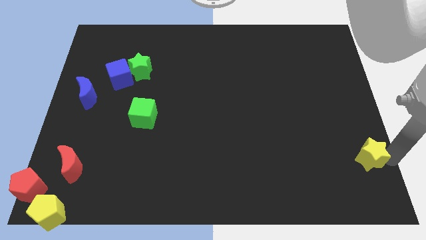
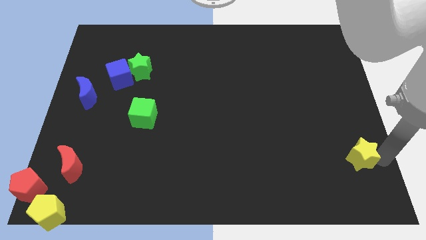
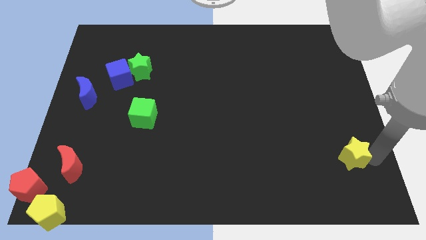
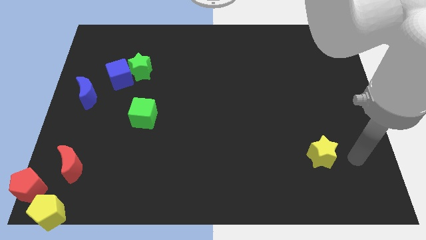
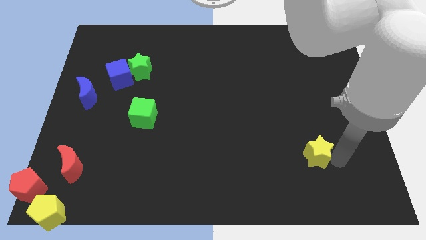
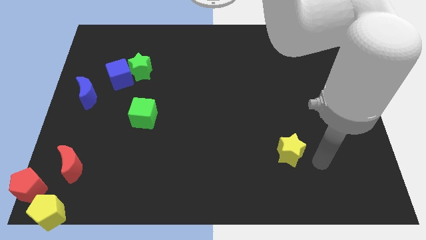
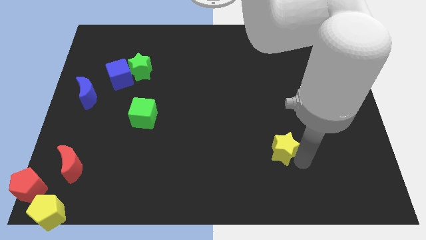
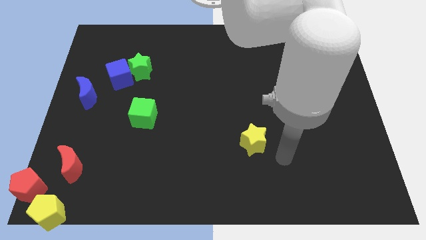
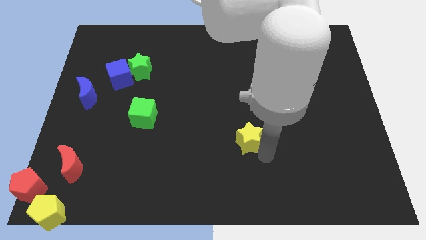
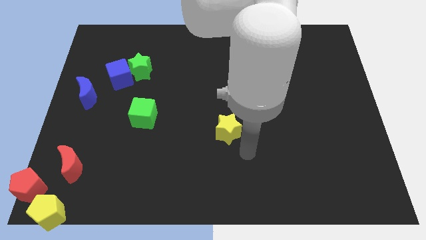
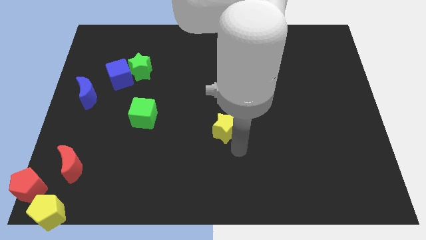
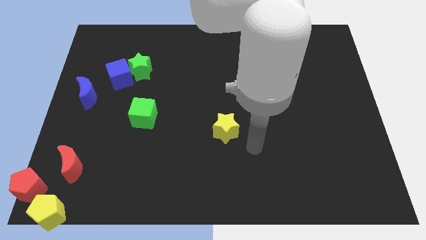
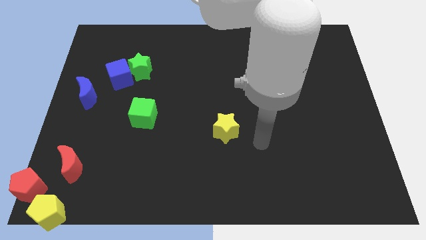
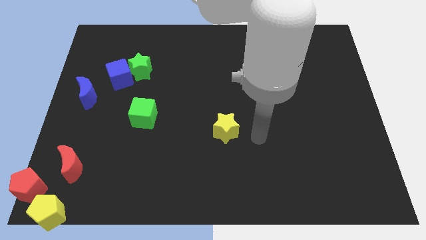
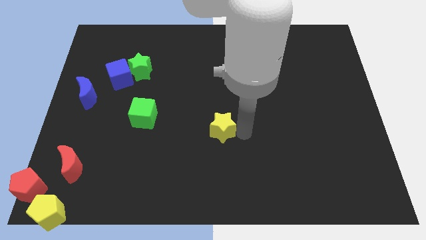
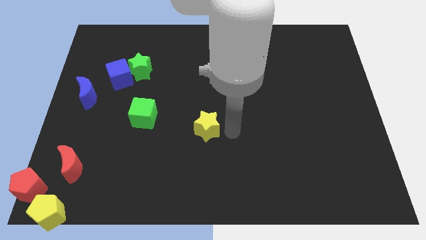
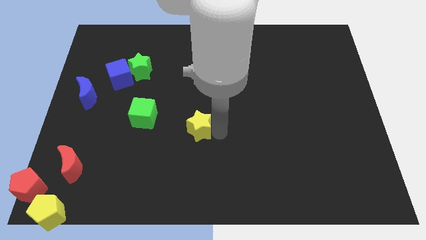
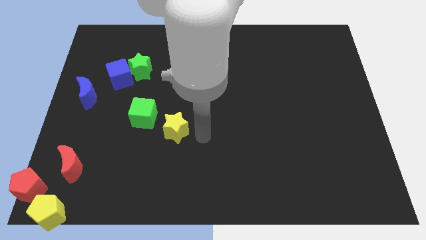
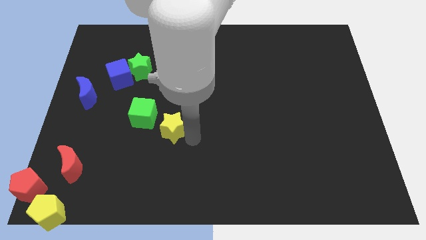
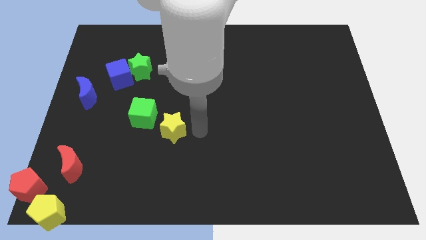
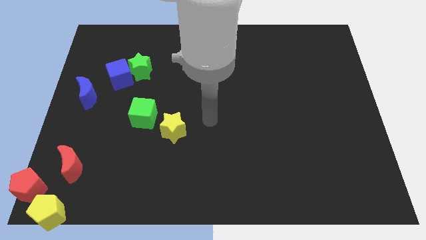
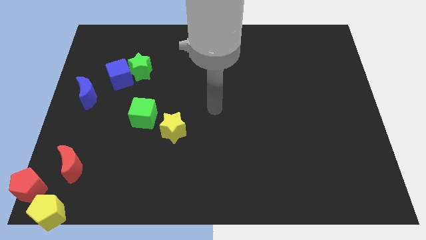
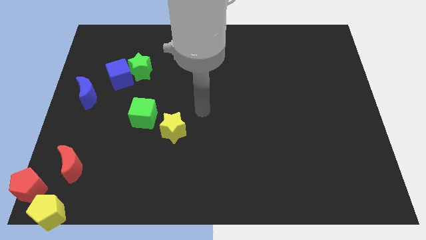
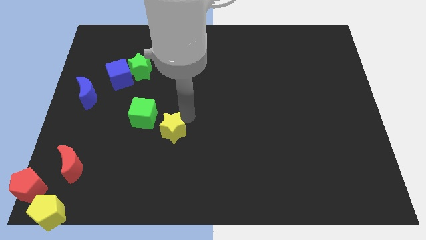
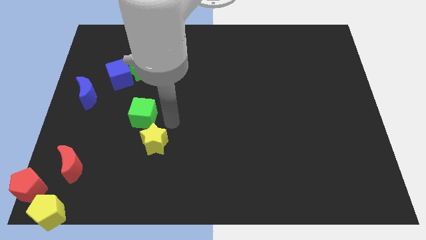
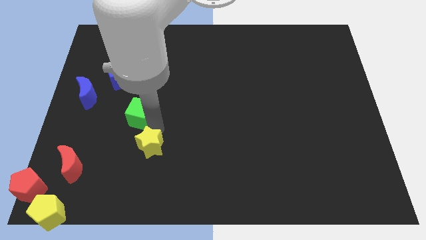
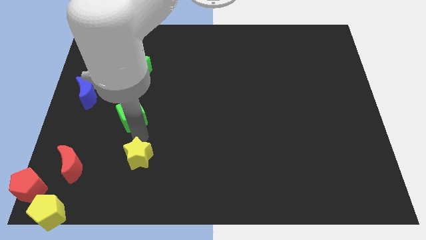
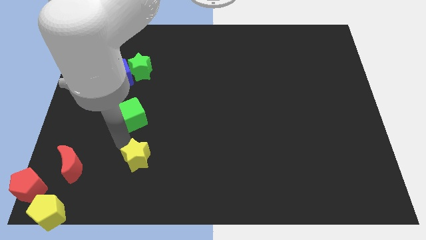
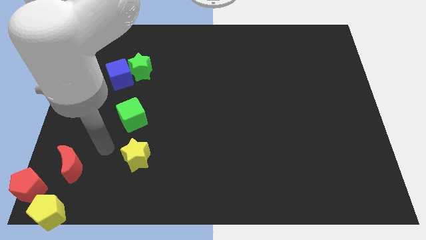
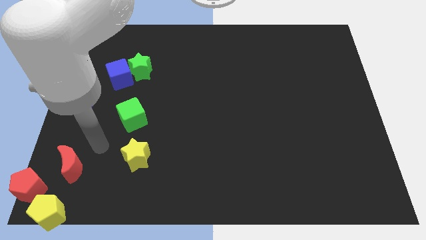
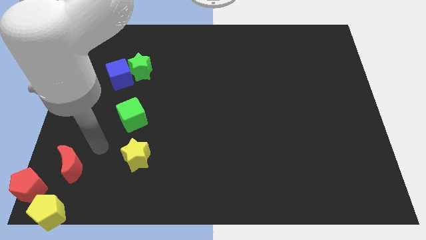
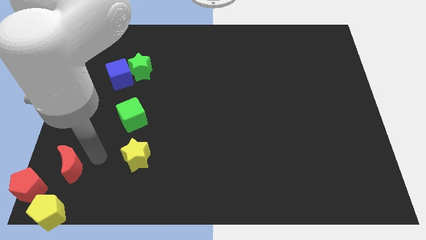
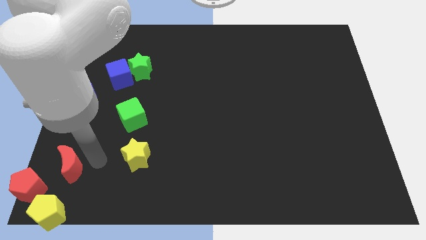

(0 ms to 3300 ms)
put yellow star below green cube

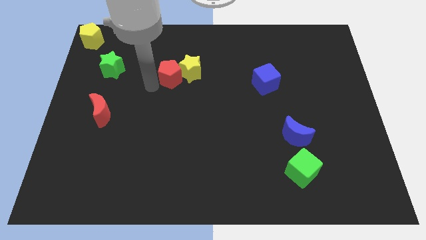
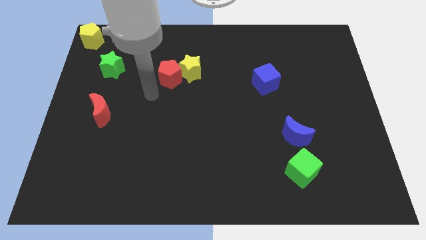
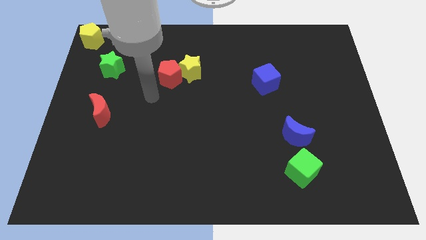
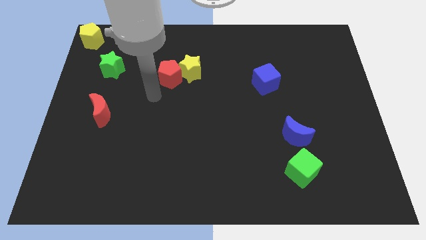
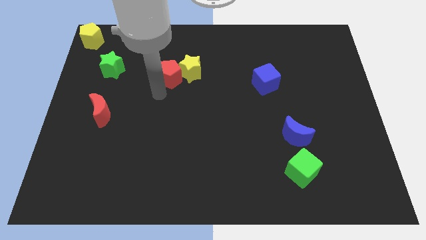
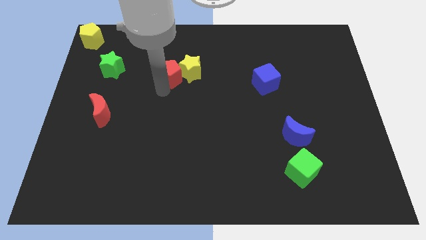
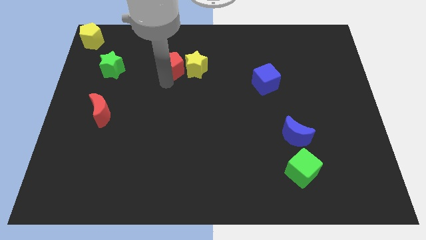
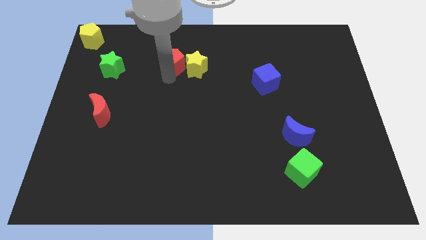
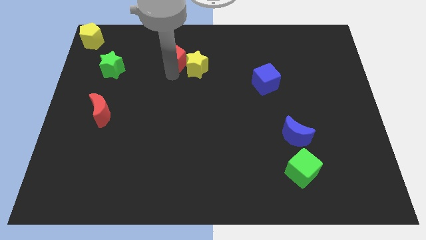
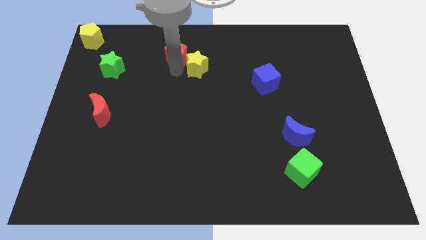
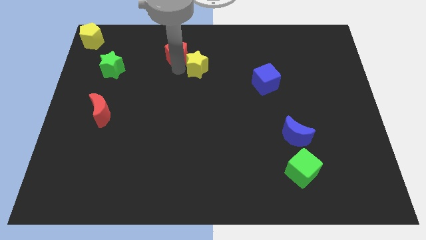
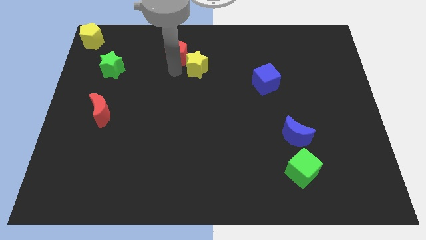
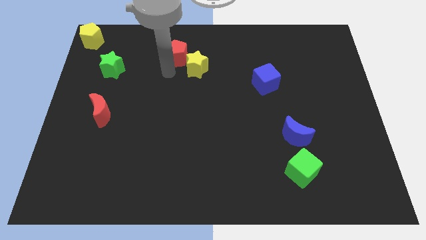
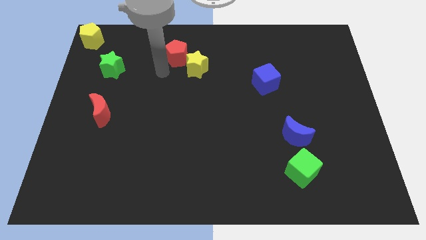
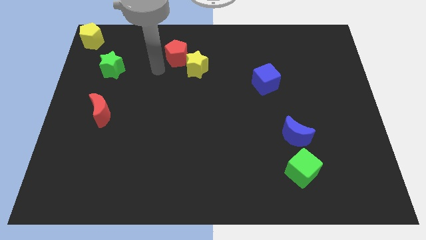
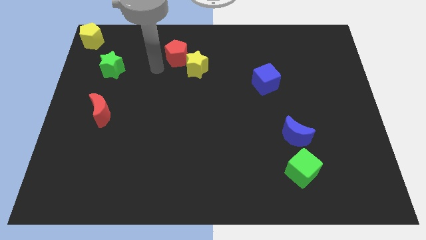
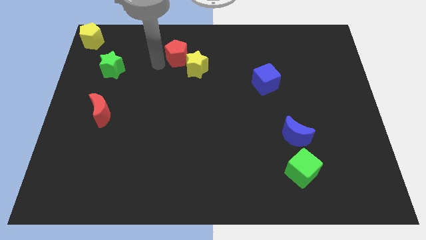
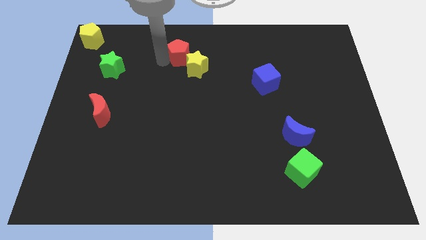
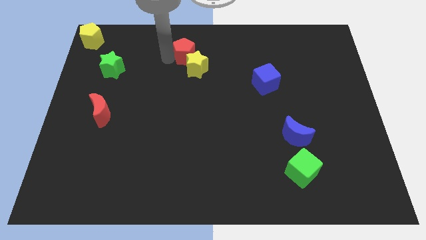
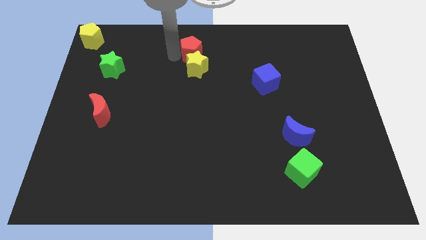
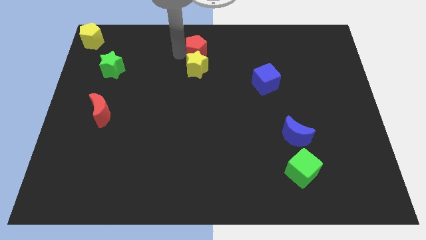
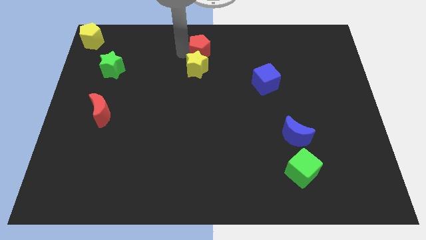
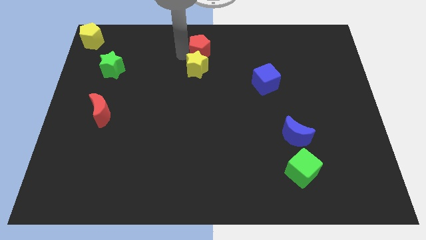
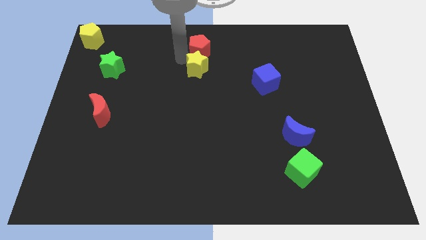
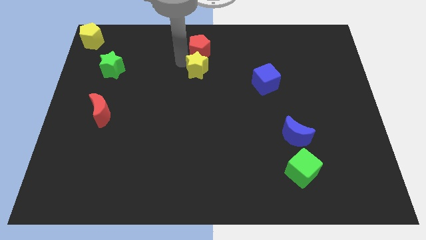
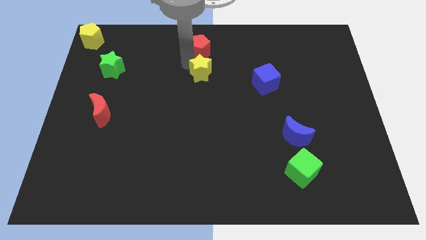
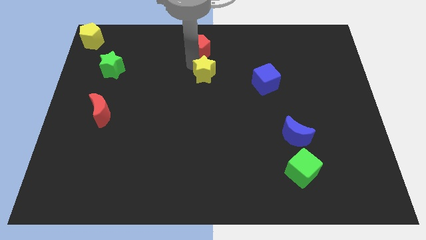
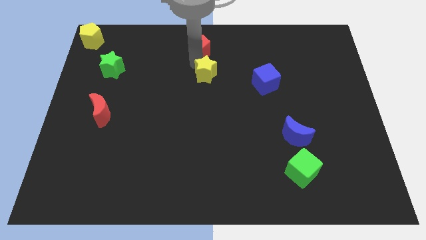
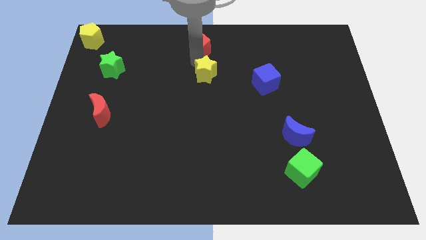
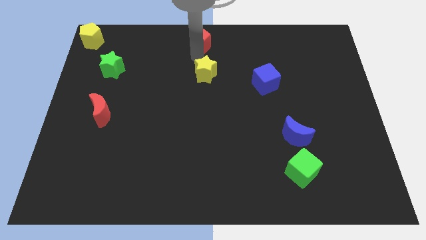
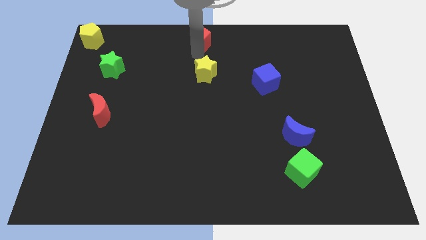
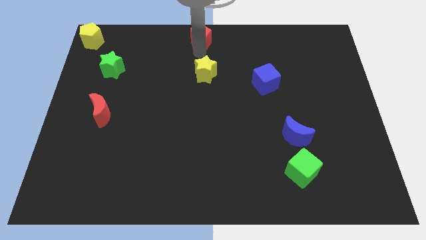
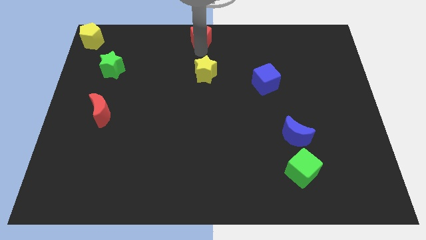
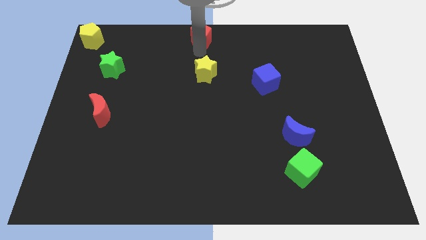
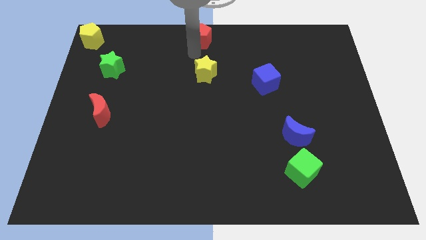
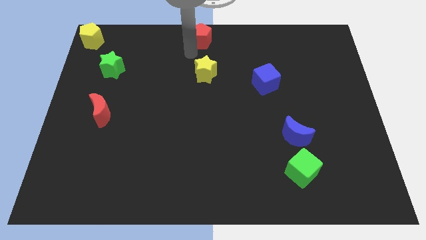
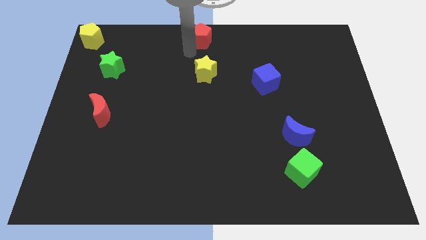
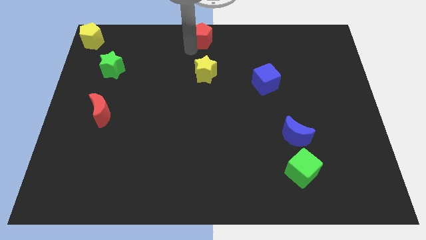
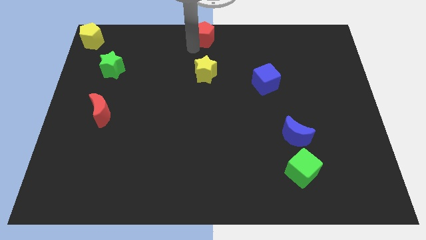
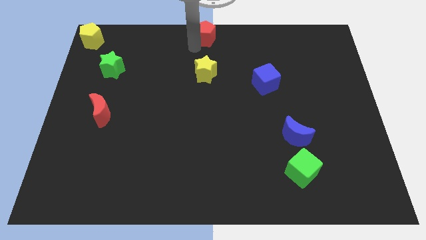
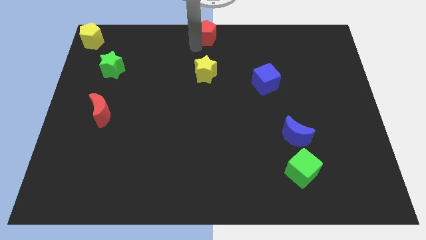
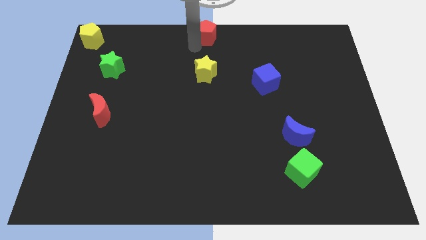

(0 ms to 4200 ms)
move the red pentagon to the top center of the board

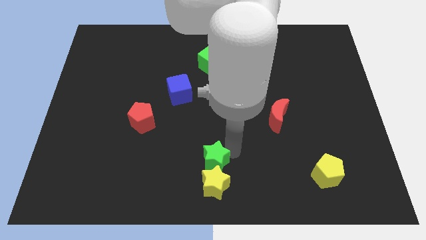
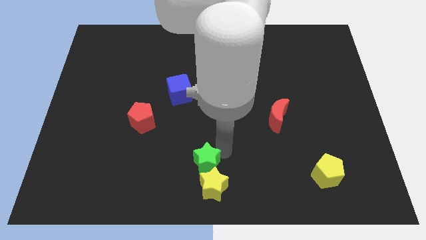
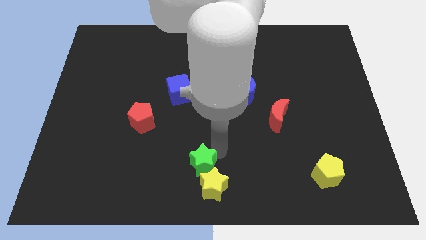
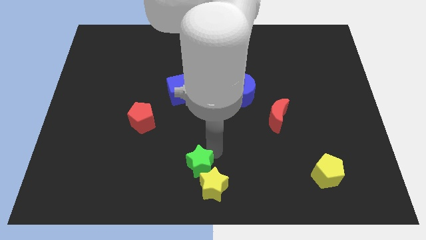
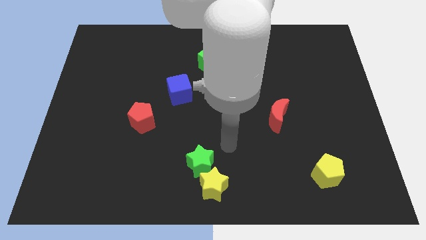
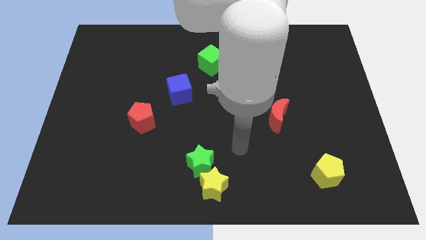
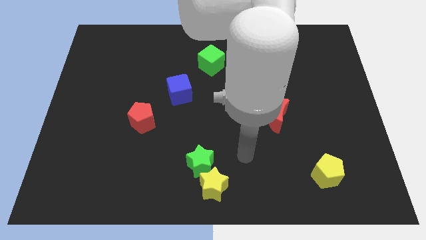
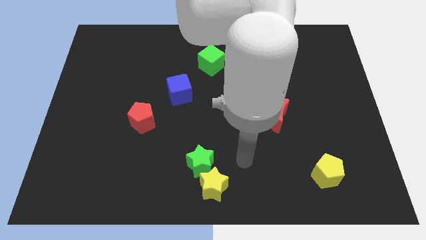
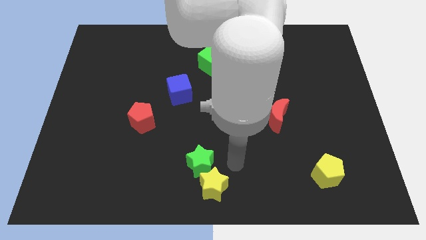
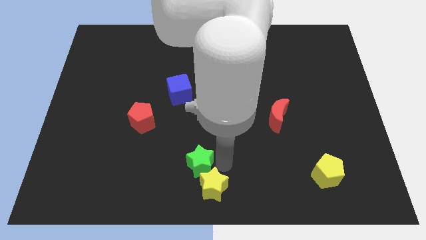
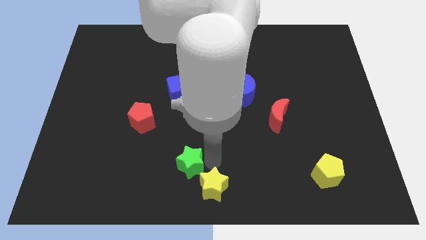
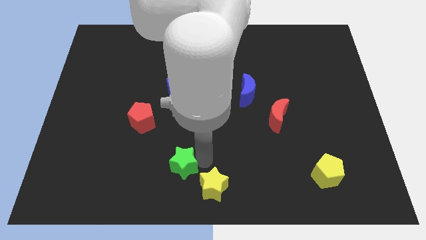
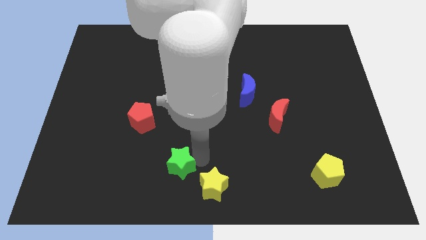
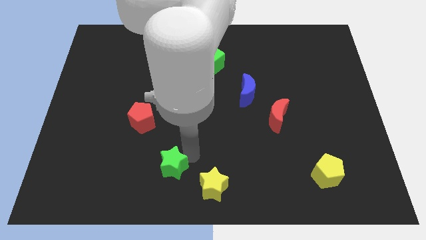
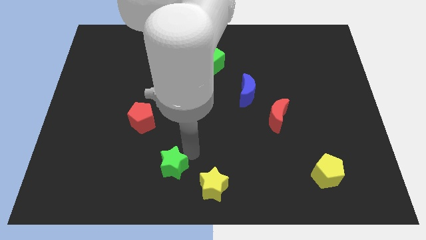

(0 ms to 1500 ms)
move the green star away from the yellow star

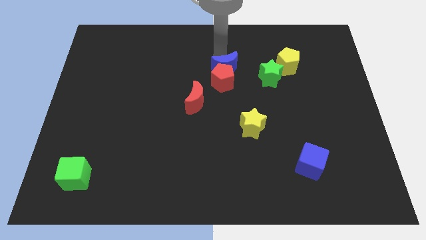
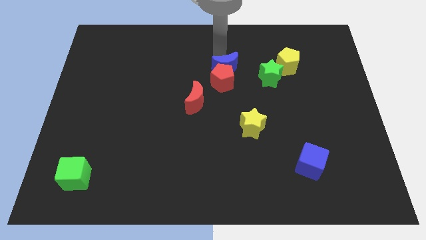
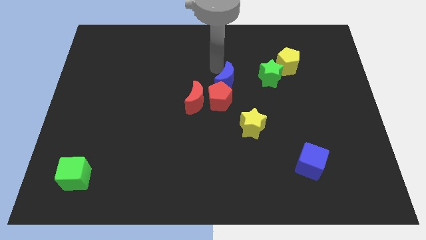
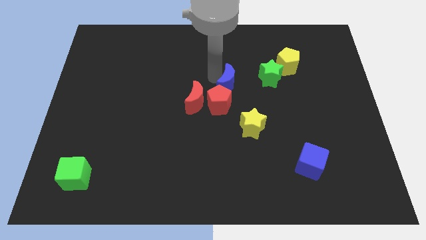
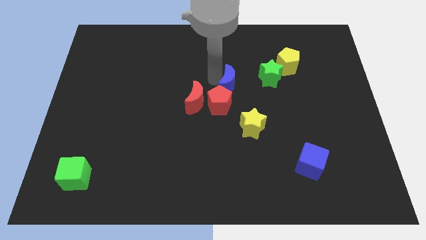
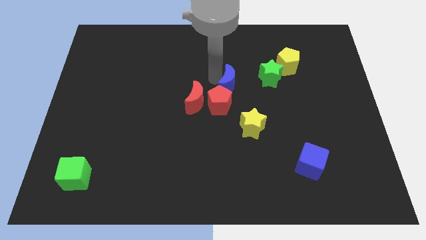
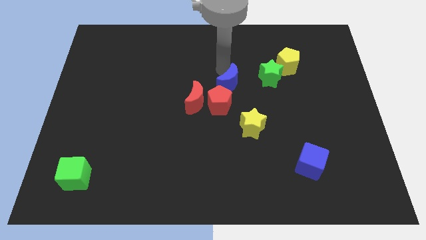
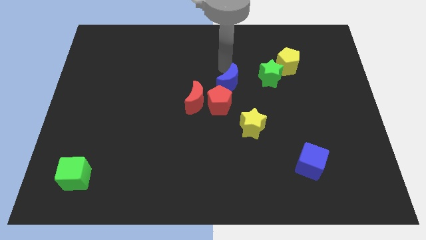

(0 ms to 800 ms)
push the red pentagon and blue moon downward
